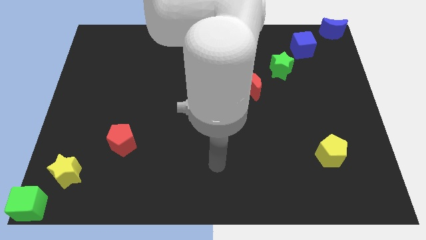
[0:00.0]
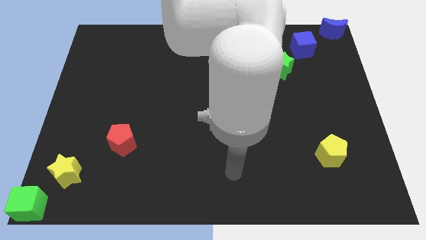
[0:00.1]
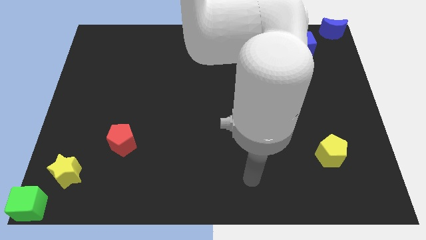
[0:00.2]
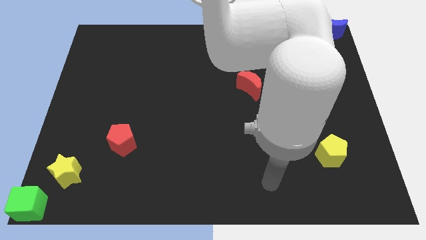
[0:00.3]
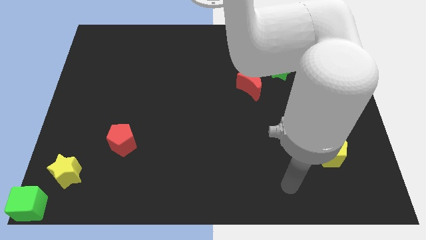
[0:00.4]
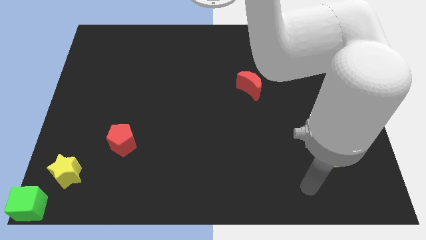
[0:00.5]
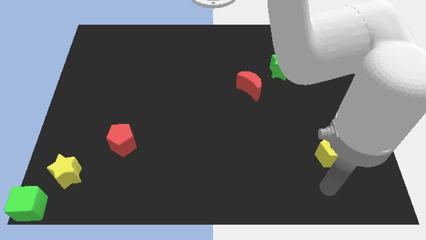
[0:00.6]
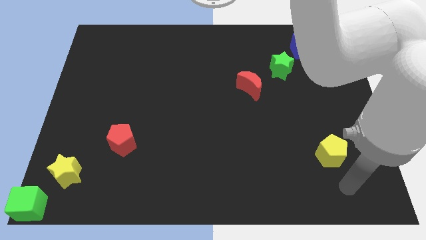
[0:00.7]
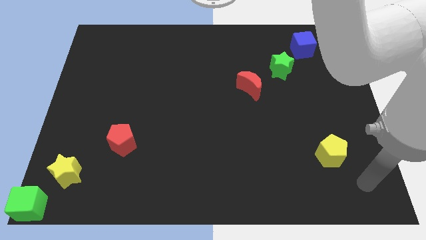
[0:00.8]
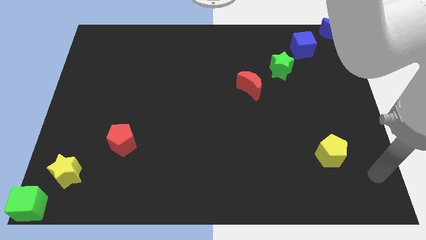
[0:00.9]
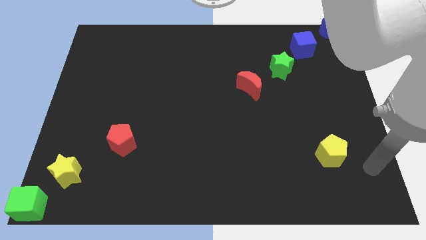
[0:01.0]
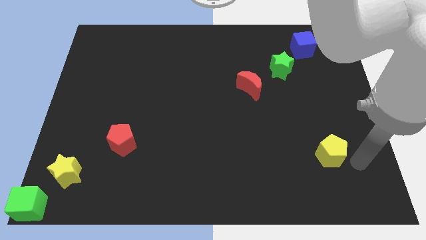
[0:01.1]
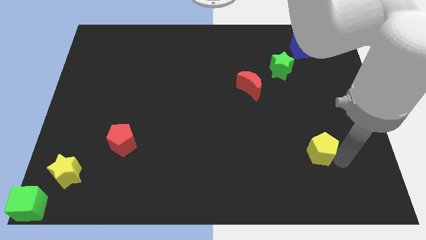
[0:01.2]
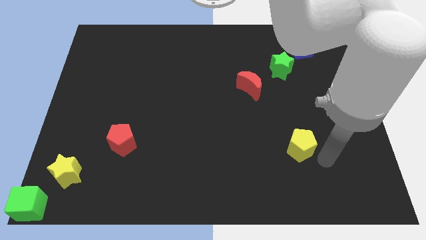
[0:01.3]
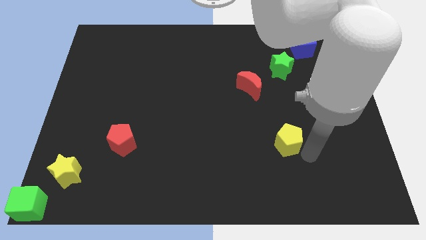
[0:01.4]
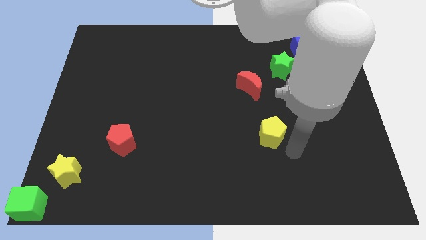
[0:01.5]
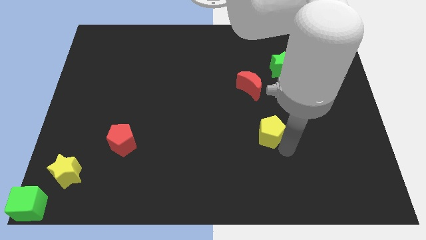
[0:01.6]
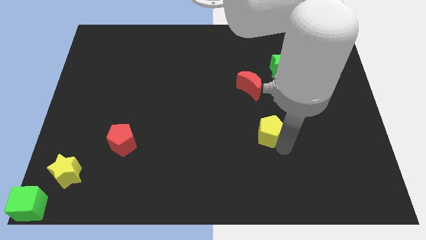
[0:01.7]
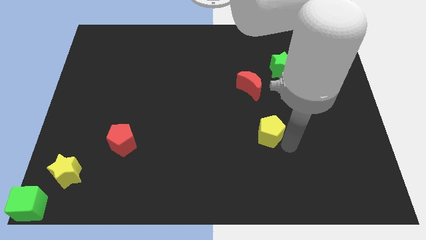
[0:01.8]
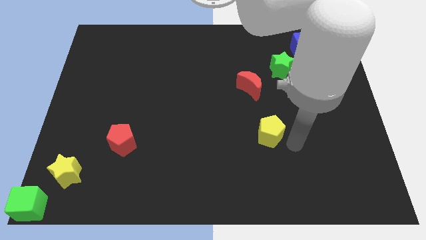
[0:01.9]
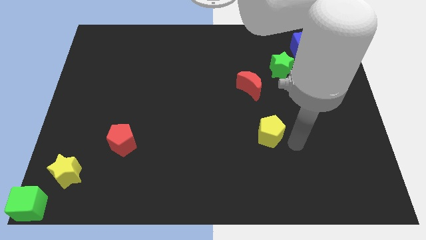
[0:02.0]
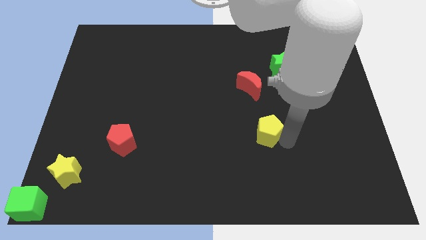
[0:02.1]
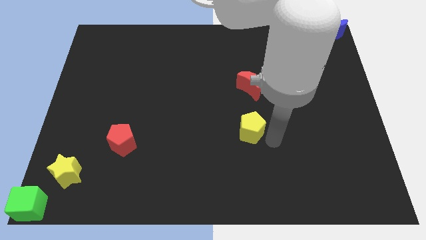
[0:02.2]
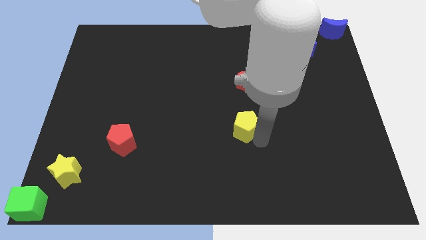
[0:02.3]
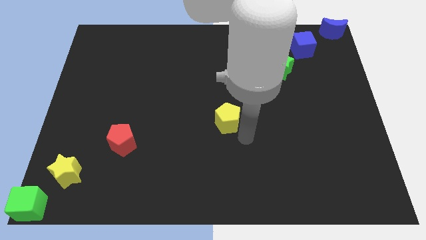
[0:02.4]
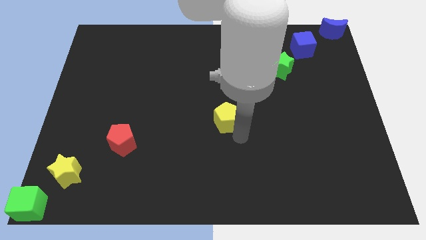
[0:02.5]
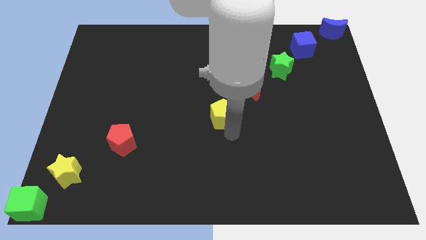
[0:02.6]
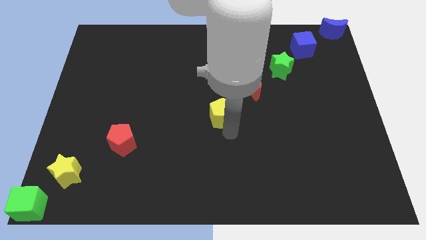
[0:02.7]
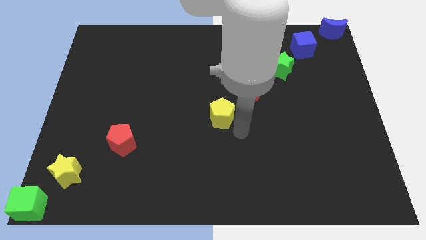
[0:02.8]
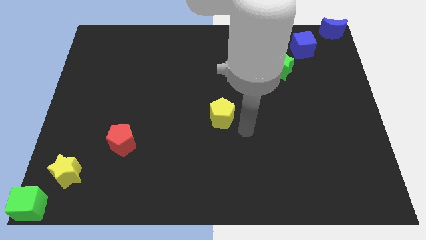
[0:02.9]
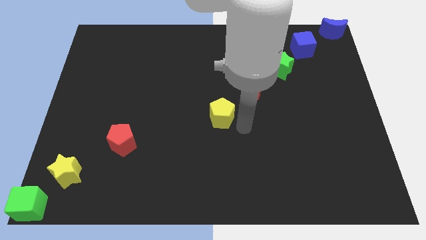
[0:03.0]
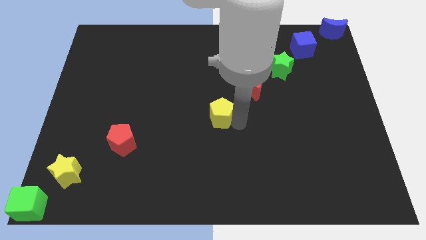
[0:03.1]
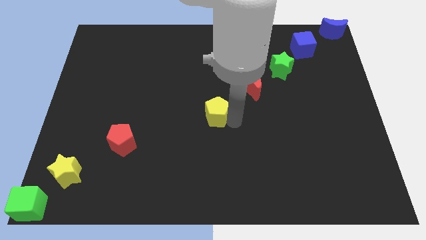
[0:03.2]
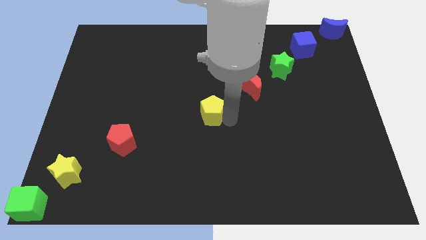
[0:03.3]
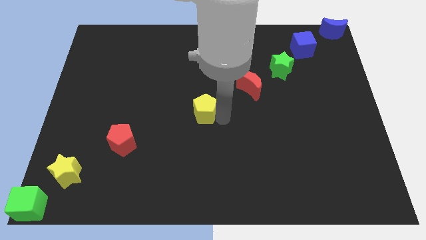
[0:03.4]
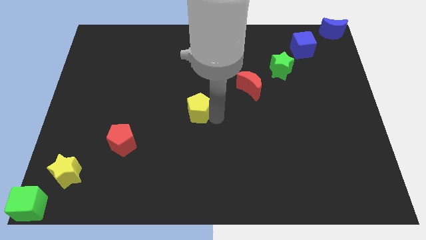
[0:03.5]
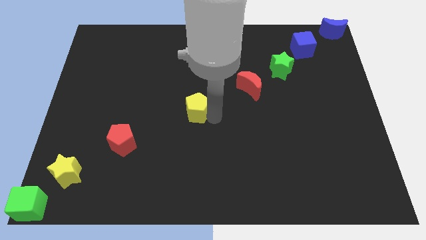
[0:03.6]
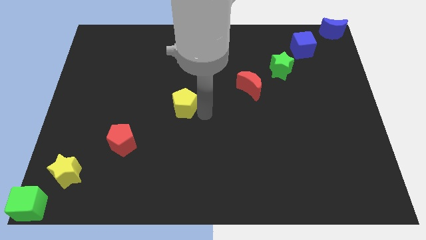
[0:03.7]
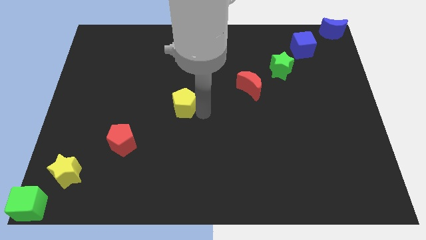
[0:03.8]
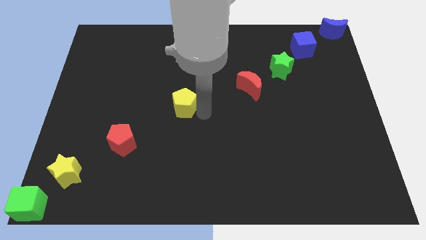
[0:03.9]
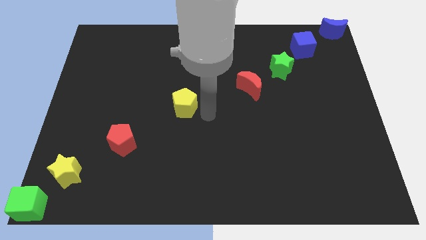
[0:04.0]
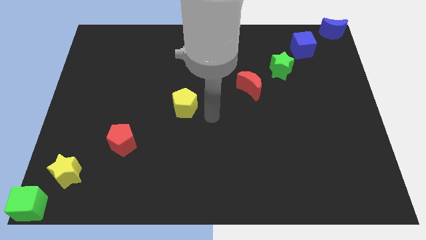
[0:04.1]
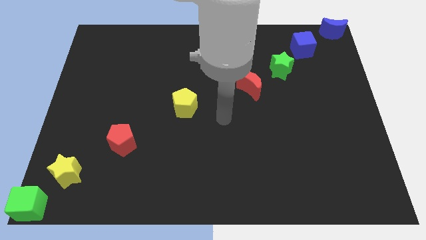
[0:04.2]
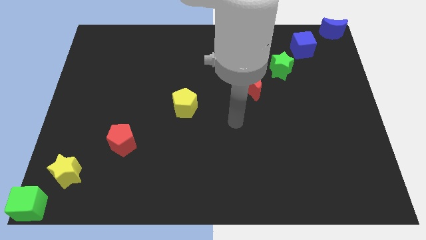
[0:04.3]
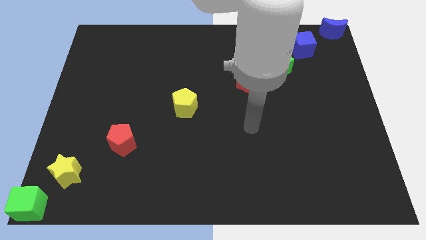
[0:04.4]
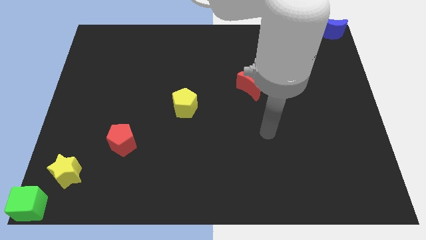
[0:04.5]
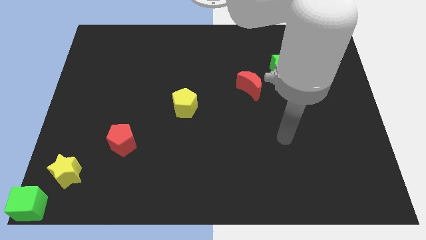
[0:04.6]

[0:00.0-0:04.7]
place the yellow pentagon in between the red pentagon and the red crescent

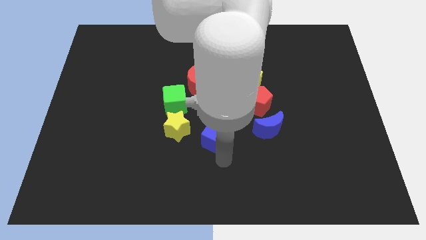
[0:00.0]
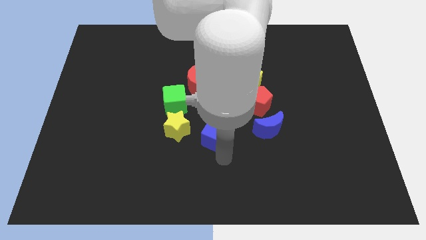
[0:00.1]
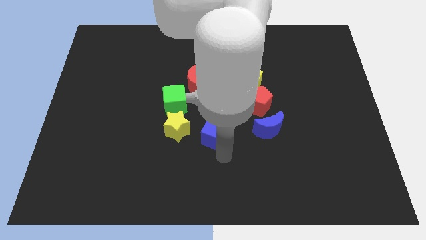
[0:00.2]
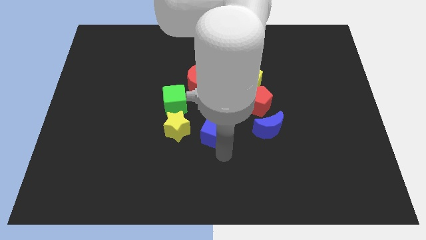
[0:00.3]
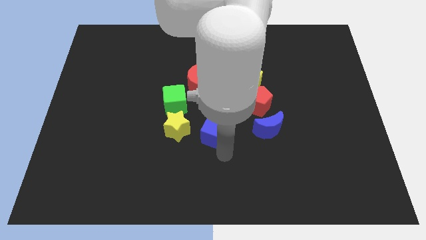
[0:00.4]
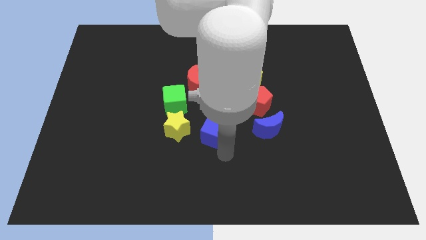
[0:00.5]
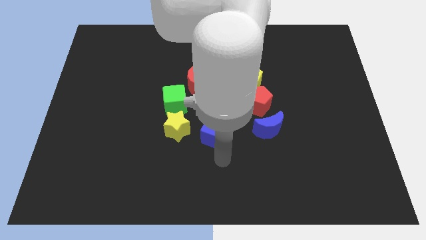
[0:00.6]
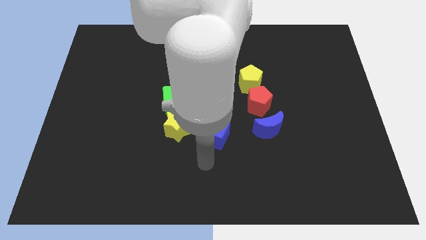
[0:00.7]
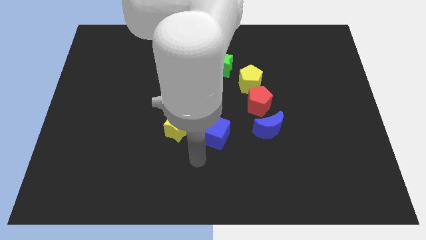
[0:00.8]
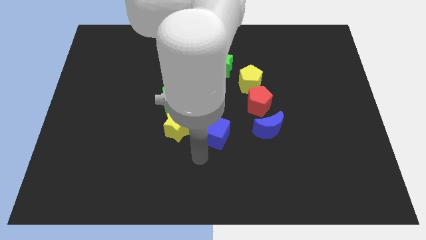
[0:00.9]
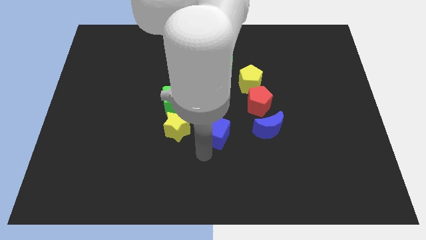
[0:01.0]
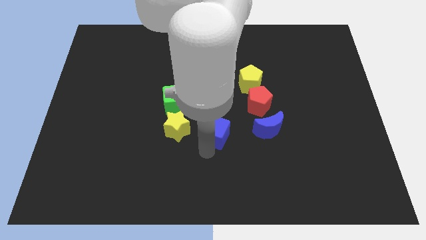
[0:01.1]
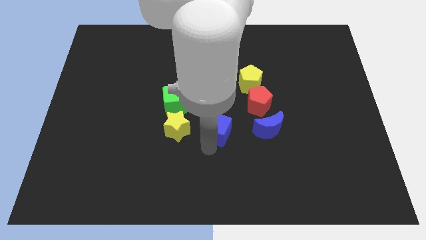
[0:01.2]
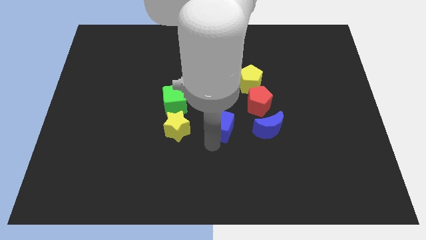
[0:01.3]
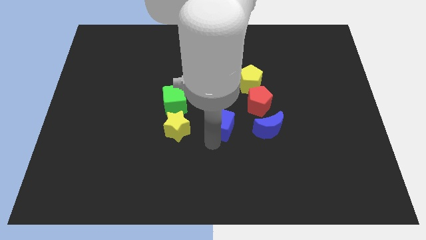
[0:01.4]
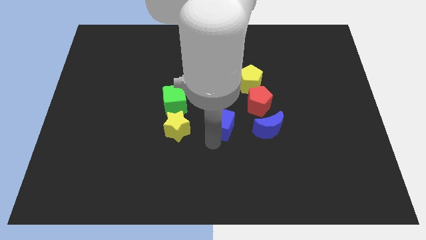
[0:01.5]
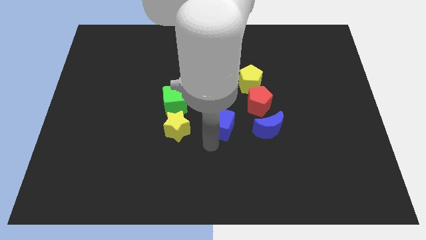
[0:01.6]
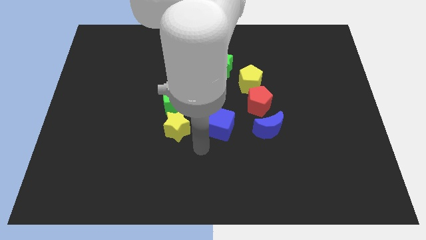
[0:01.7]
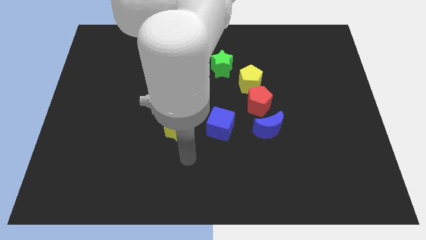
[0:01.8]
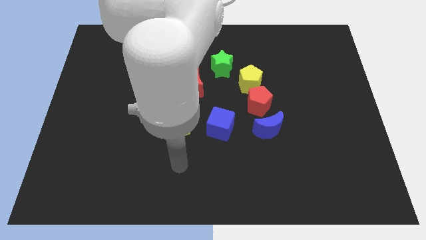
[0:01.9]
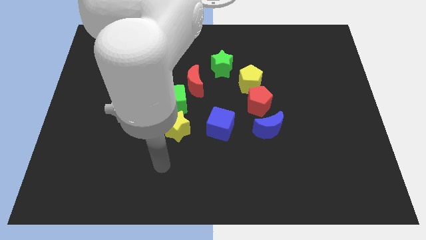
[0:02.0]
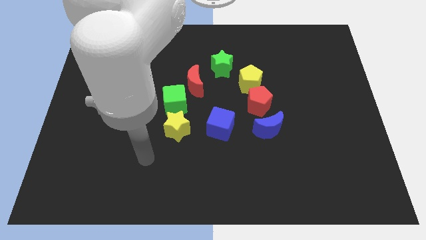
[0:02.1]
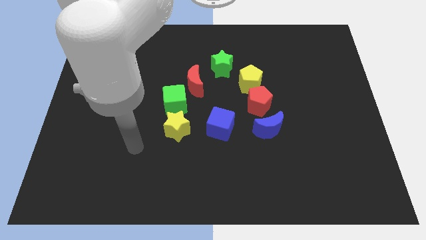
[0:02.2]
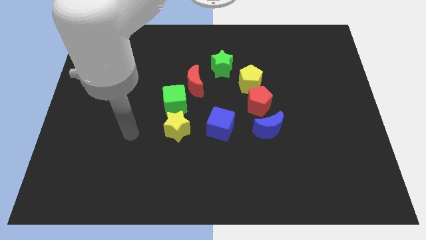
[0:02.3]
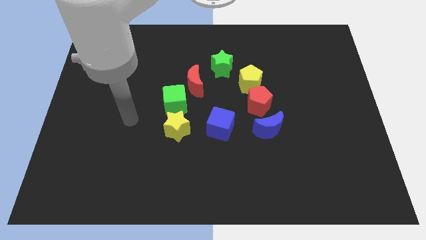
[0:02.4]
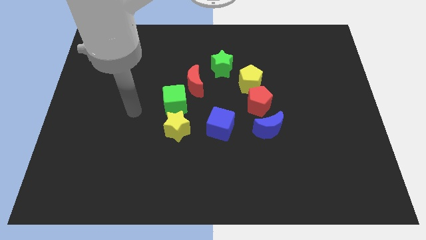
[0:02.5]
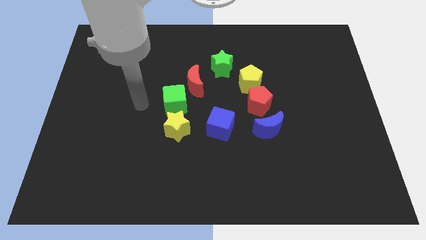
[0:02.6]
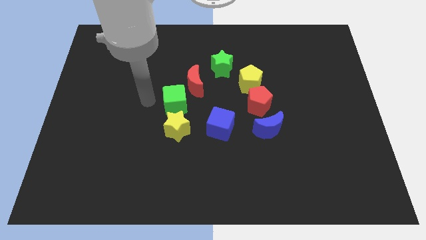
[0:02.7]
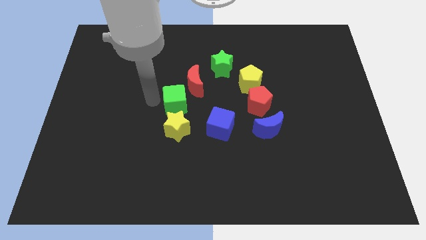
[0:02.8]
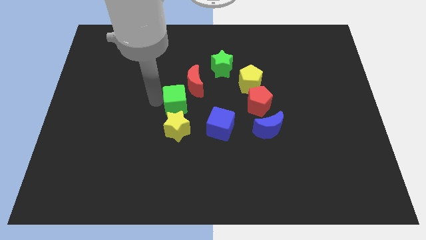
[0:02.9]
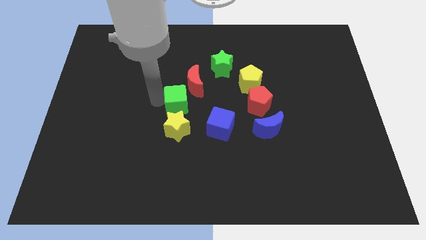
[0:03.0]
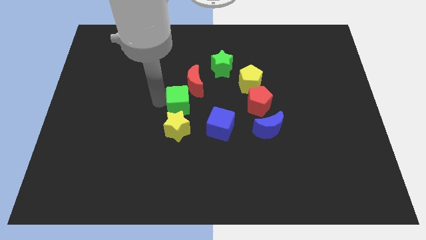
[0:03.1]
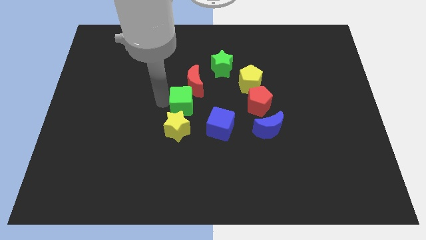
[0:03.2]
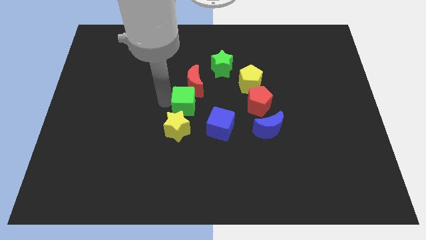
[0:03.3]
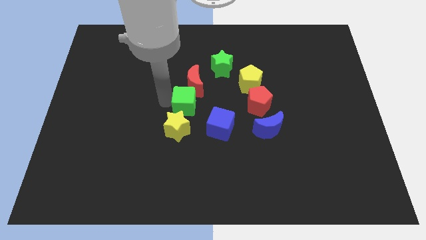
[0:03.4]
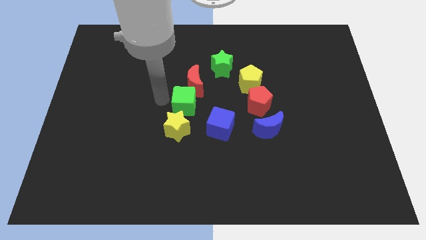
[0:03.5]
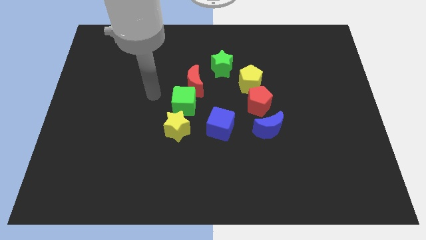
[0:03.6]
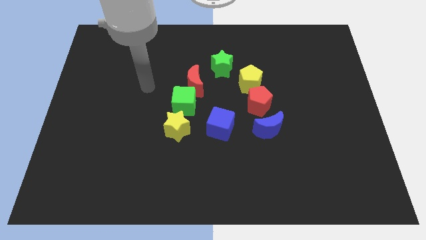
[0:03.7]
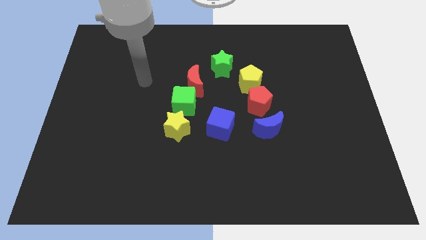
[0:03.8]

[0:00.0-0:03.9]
adjust the blue cube in between the blue moon and yellow star

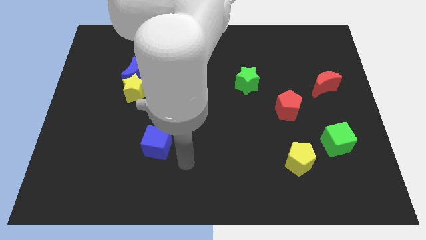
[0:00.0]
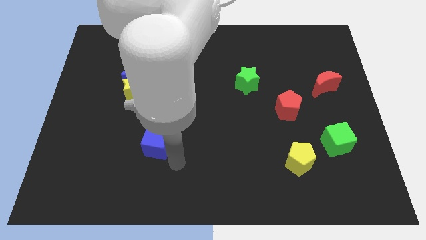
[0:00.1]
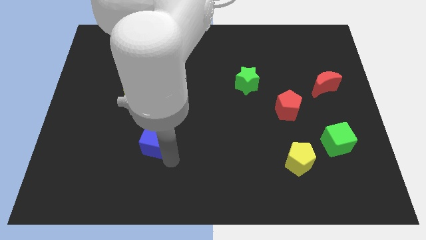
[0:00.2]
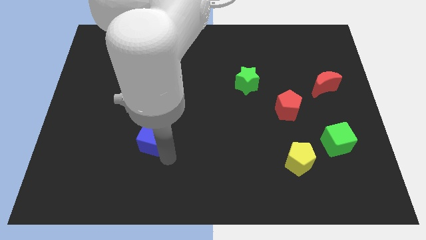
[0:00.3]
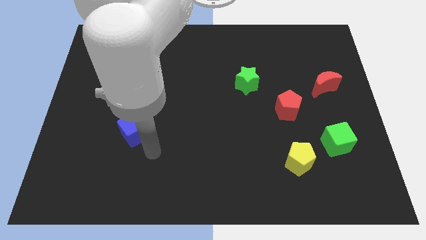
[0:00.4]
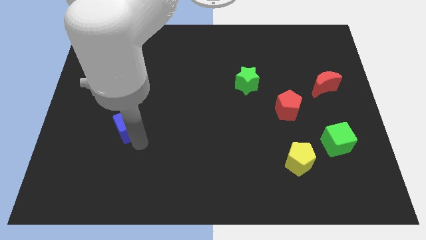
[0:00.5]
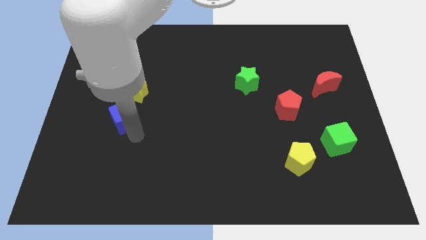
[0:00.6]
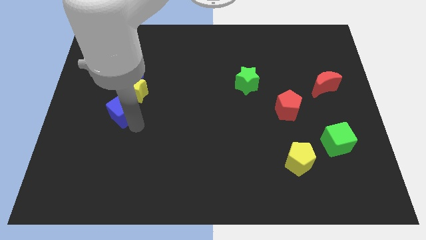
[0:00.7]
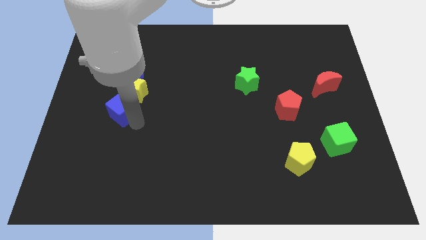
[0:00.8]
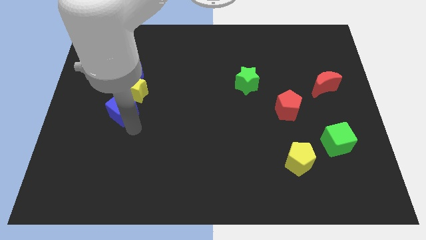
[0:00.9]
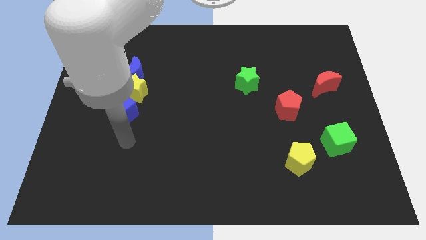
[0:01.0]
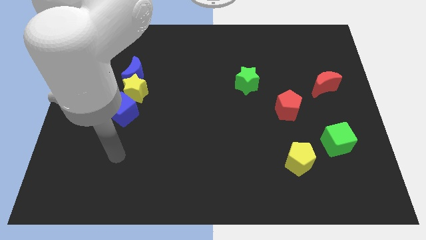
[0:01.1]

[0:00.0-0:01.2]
place the blue cube to the bottom of the yellow star
